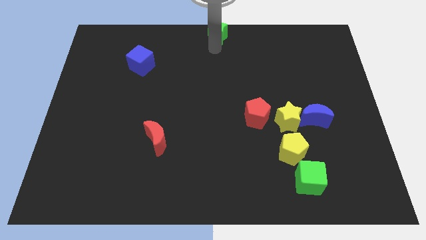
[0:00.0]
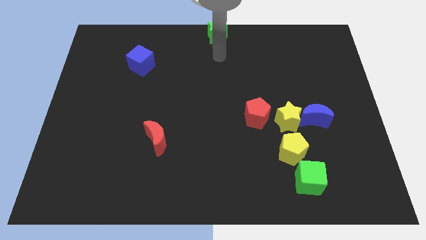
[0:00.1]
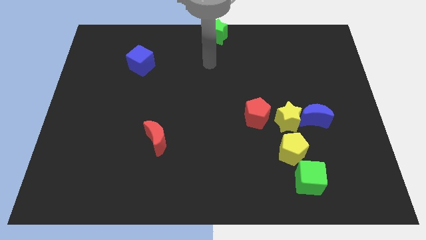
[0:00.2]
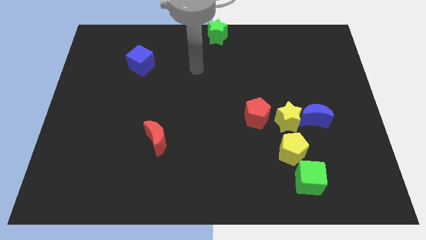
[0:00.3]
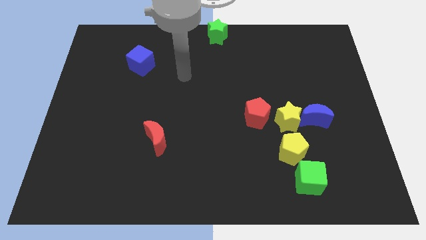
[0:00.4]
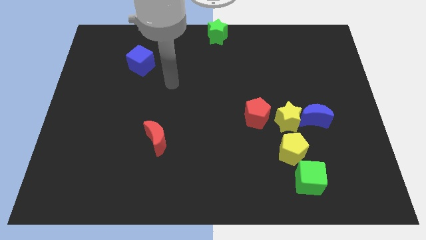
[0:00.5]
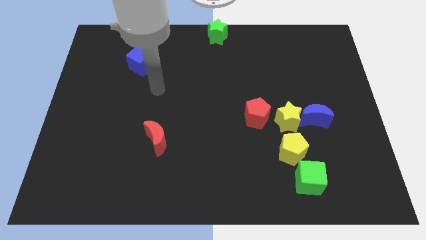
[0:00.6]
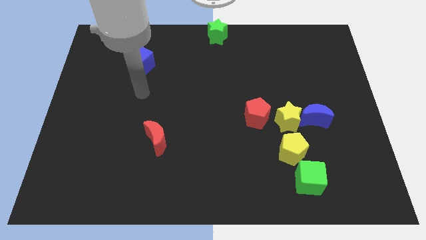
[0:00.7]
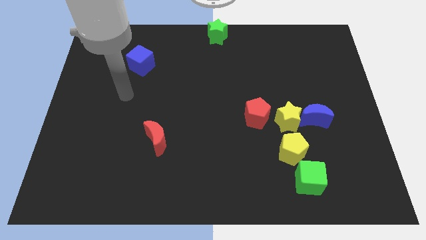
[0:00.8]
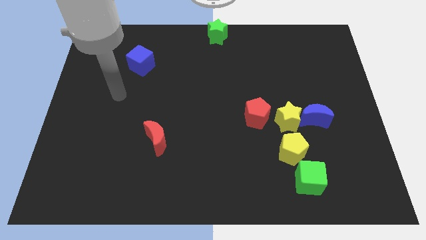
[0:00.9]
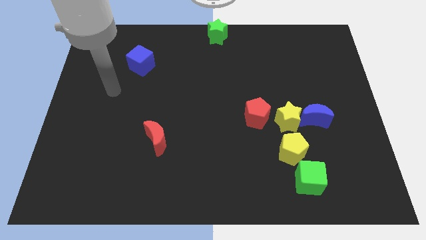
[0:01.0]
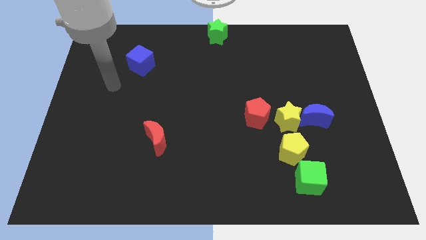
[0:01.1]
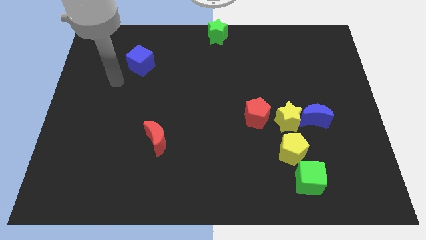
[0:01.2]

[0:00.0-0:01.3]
move your arm away from green star

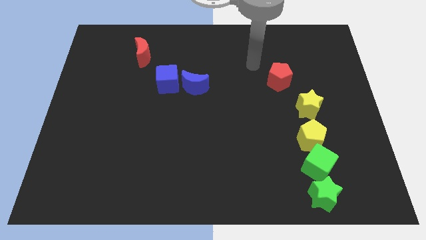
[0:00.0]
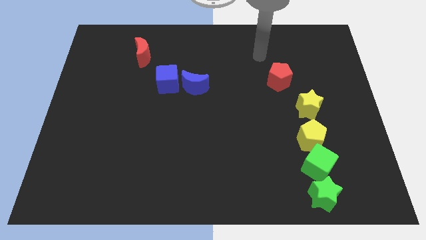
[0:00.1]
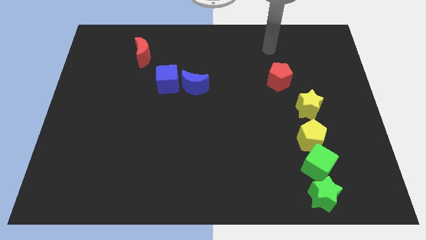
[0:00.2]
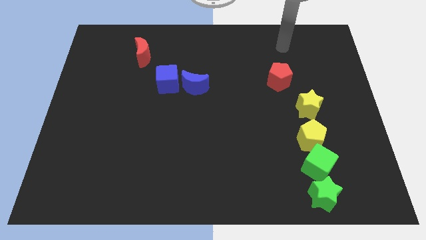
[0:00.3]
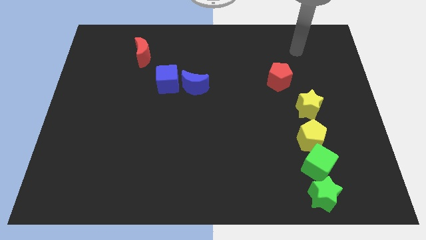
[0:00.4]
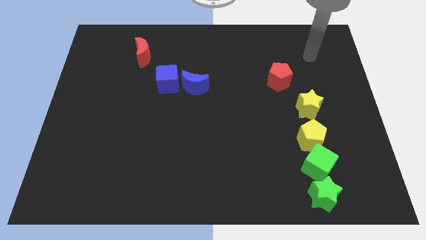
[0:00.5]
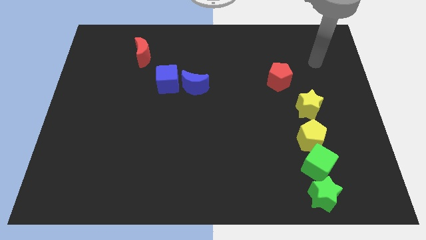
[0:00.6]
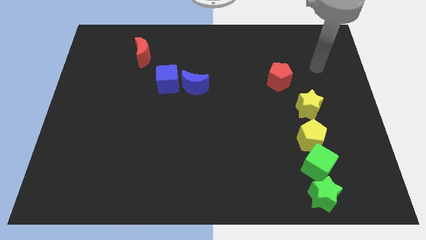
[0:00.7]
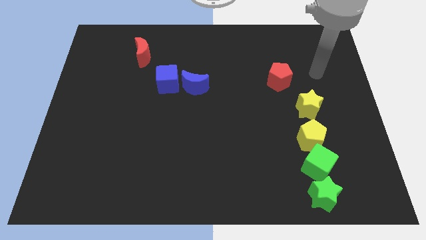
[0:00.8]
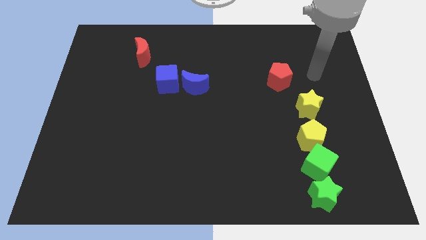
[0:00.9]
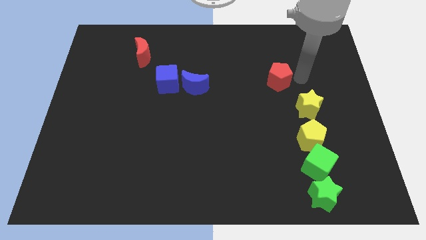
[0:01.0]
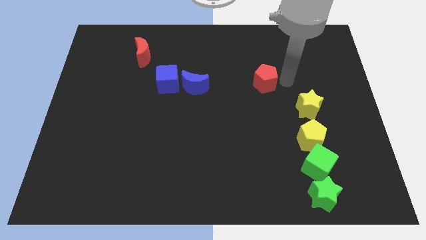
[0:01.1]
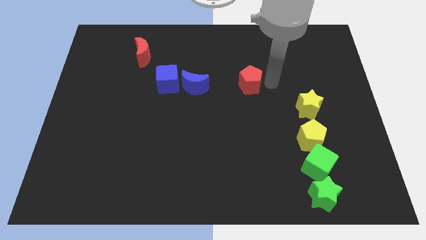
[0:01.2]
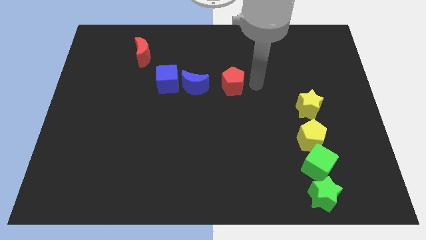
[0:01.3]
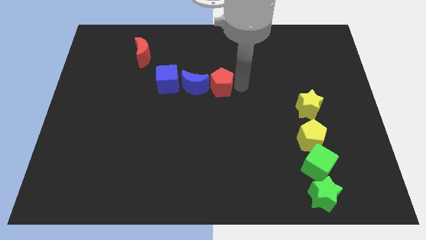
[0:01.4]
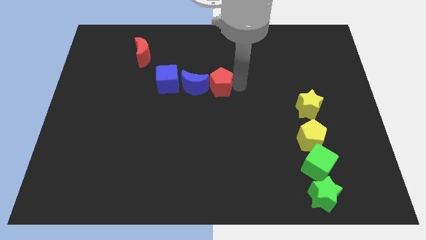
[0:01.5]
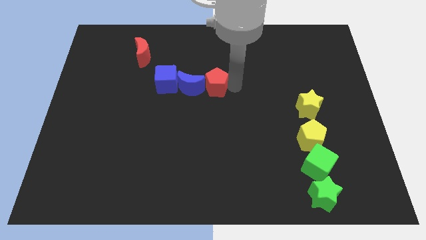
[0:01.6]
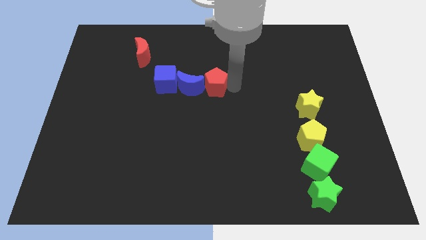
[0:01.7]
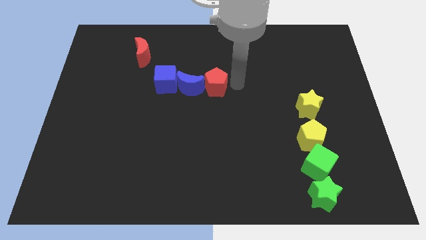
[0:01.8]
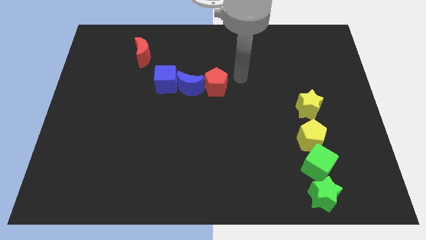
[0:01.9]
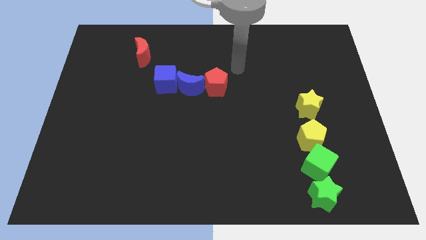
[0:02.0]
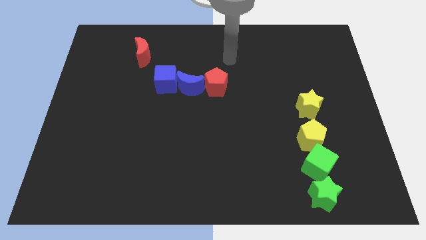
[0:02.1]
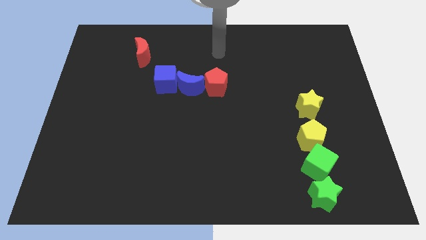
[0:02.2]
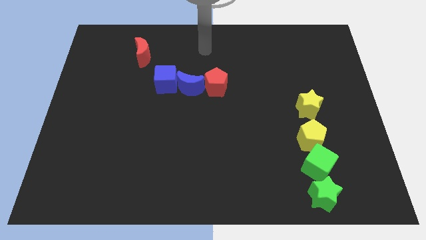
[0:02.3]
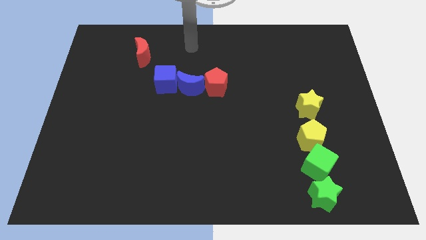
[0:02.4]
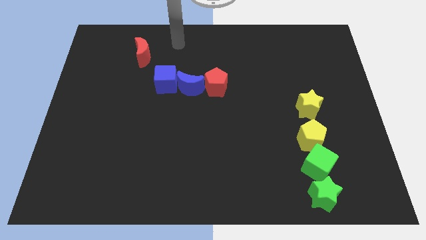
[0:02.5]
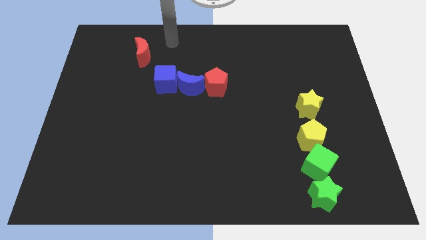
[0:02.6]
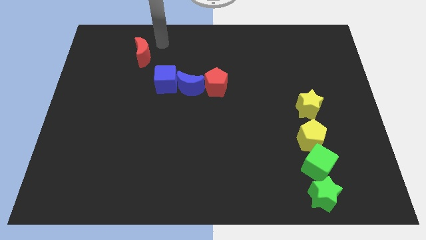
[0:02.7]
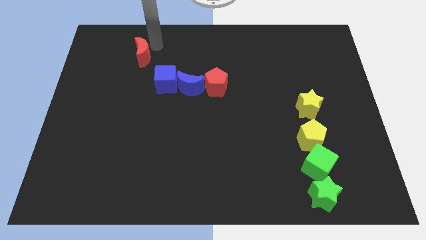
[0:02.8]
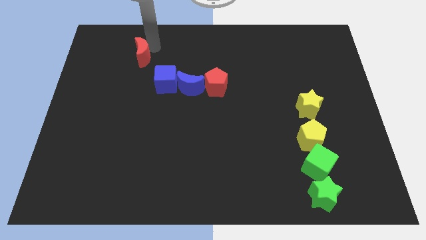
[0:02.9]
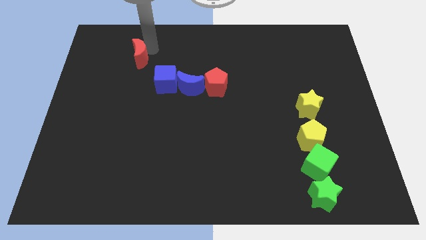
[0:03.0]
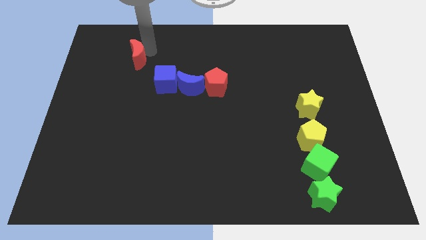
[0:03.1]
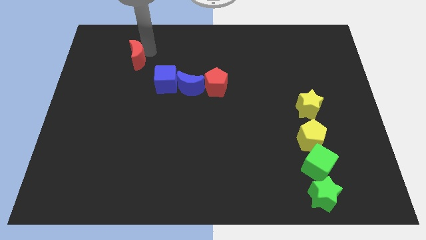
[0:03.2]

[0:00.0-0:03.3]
push the red pentagon into the blue crescent

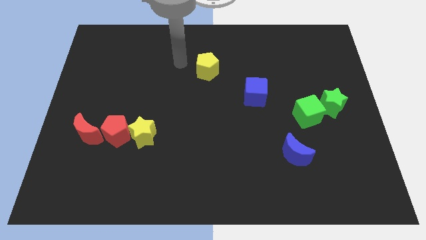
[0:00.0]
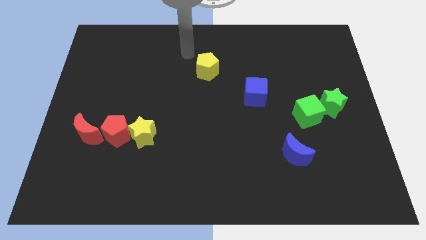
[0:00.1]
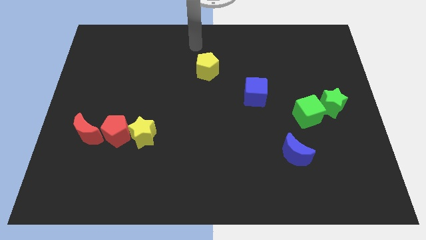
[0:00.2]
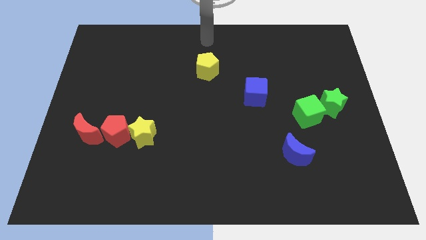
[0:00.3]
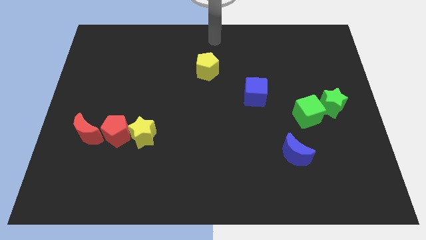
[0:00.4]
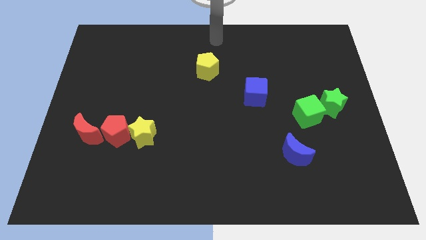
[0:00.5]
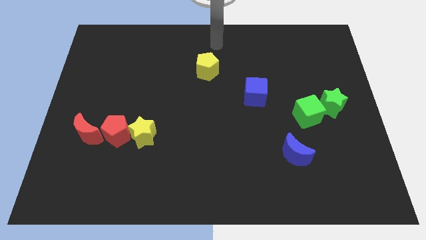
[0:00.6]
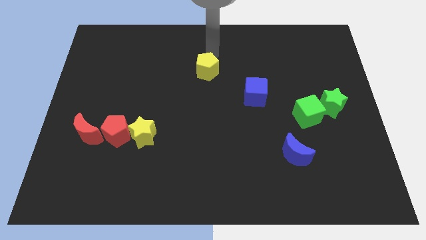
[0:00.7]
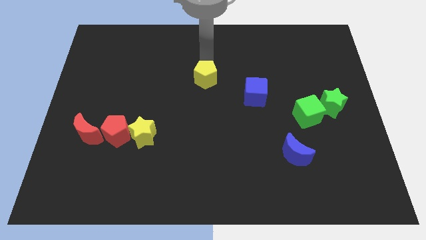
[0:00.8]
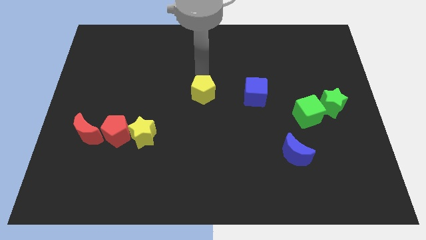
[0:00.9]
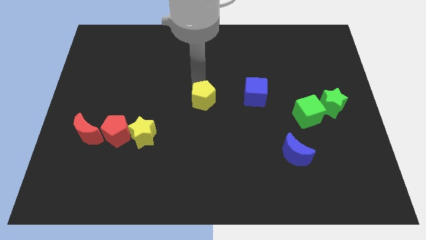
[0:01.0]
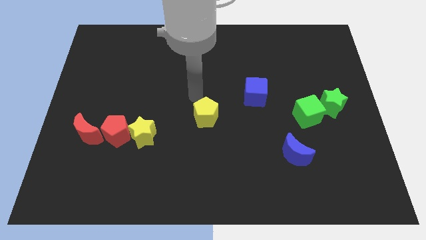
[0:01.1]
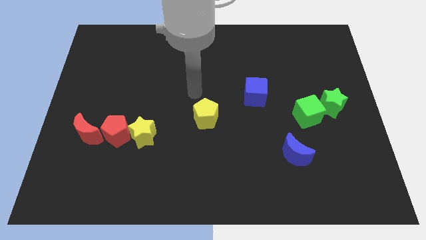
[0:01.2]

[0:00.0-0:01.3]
drag yellow pentagon downwards

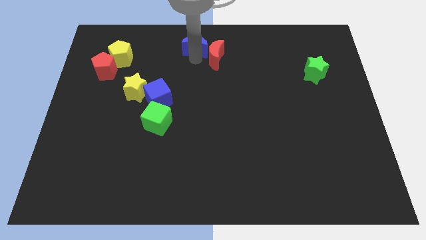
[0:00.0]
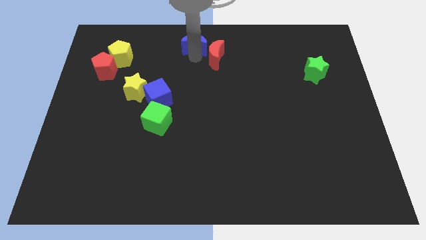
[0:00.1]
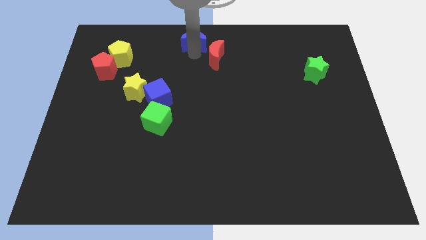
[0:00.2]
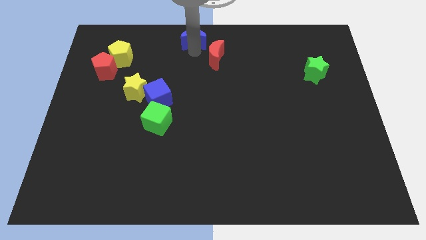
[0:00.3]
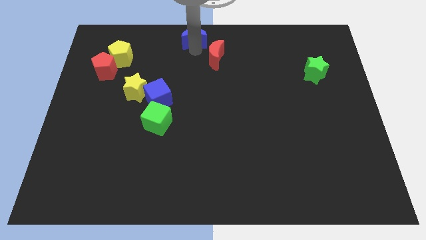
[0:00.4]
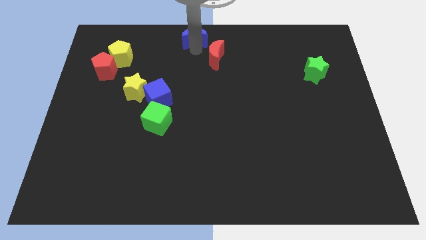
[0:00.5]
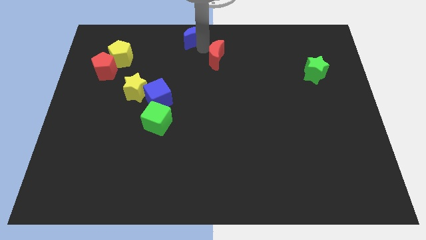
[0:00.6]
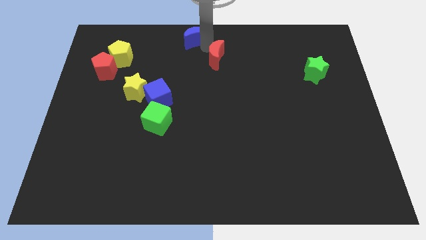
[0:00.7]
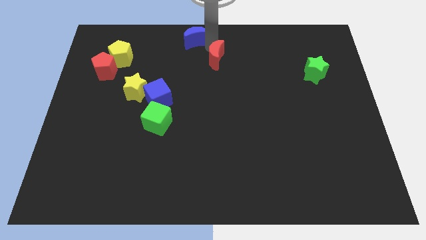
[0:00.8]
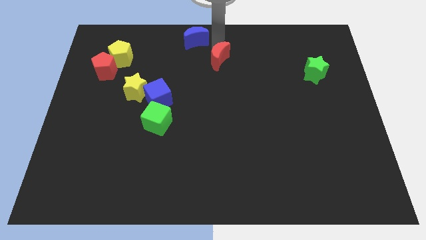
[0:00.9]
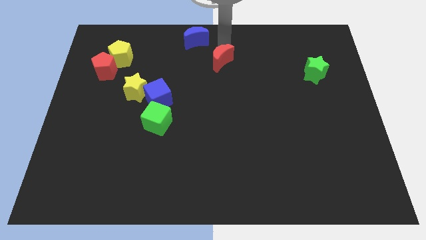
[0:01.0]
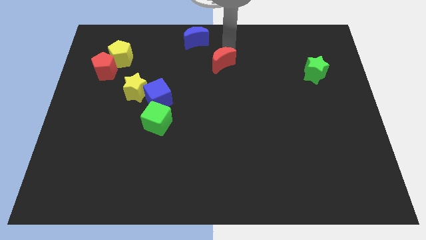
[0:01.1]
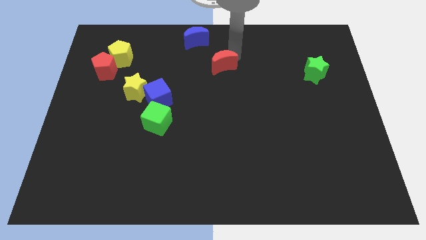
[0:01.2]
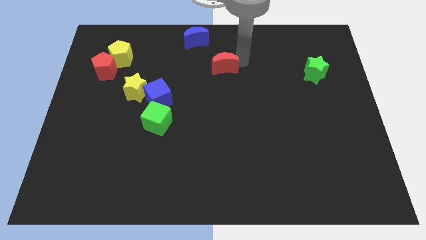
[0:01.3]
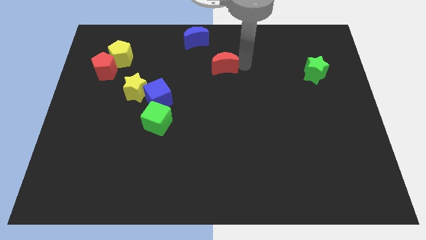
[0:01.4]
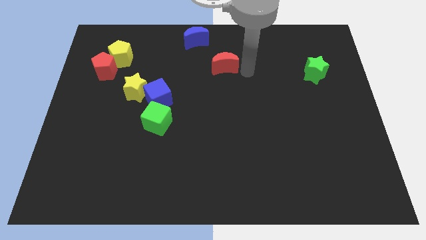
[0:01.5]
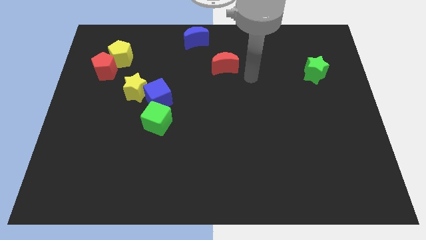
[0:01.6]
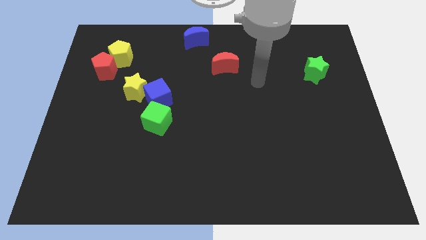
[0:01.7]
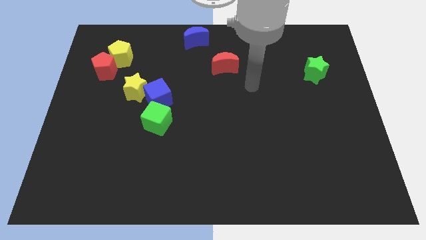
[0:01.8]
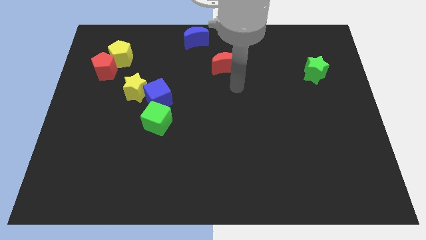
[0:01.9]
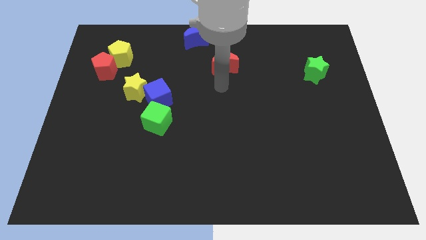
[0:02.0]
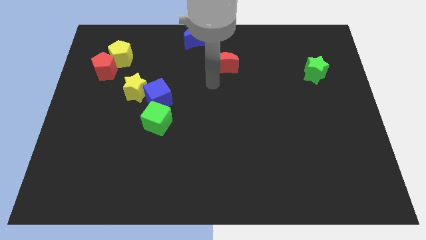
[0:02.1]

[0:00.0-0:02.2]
place the arm at the bottom of the red crescent

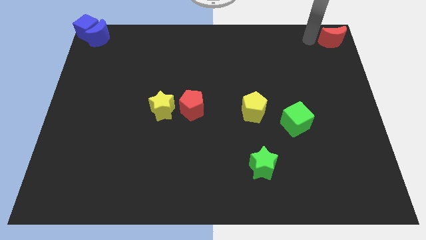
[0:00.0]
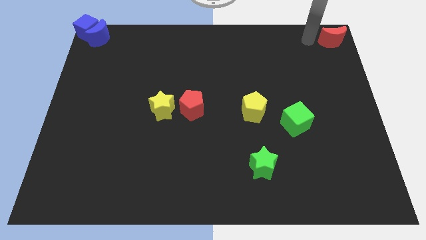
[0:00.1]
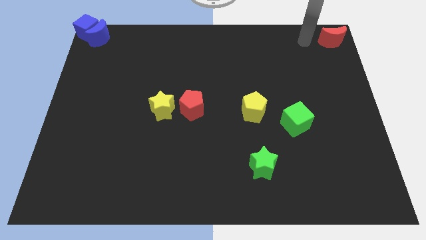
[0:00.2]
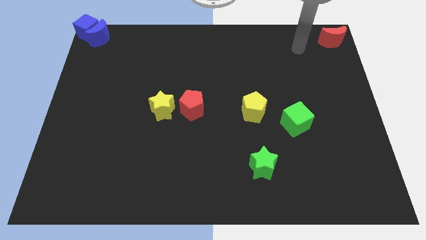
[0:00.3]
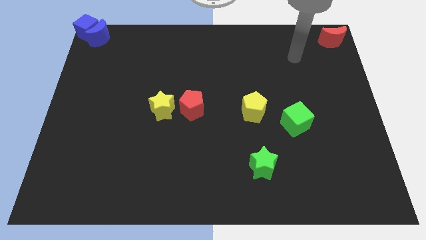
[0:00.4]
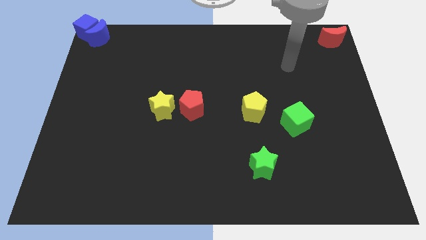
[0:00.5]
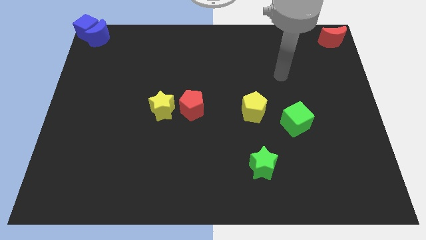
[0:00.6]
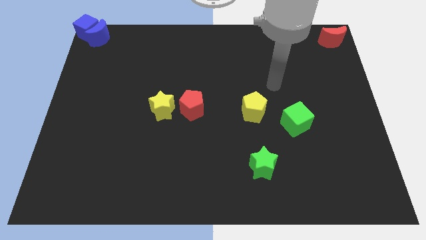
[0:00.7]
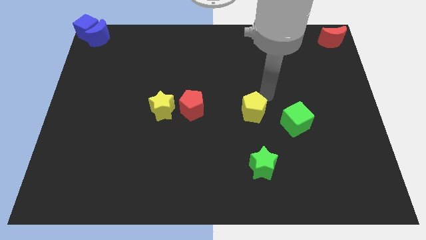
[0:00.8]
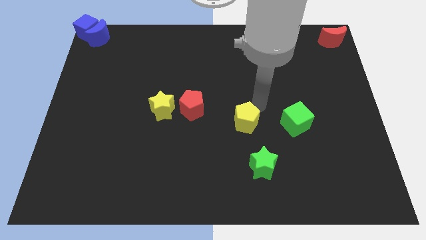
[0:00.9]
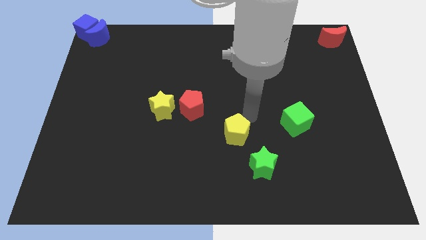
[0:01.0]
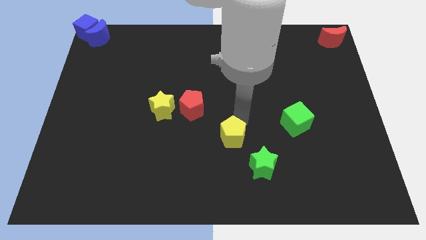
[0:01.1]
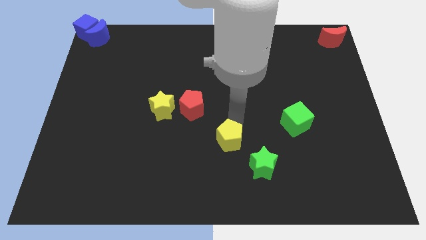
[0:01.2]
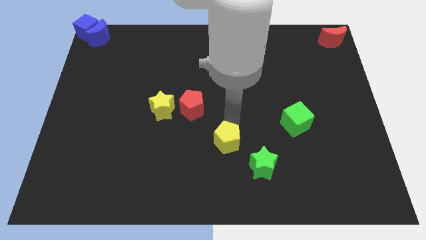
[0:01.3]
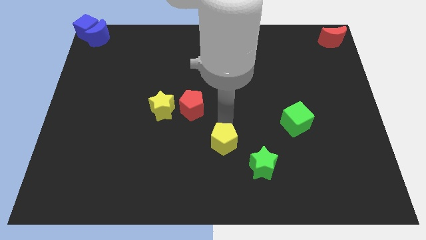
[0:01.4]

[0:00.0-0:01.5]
push the yellow pentagon in between the green star and the red pentagon
